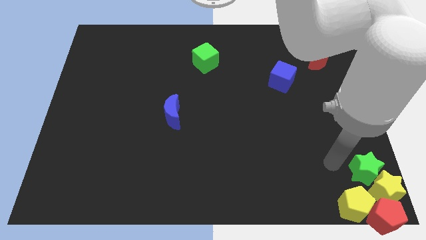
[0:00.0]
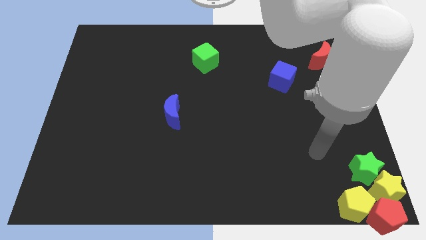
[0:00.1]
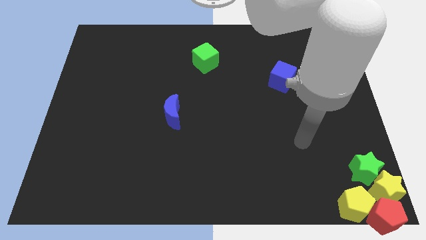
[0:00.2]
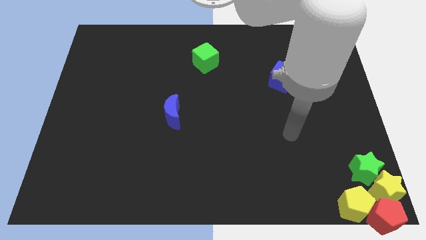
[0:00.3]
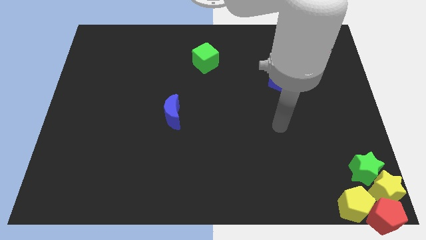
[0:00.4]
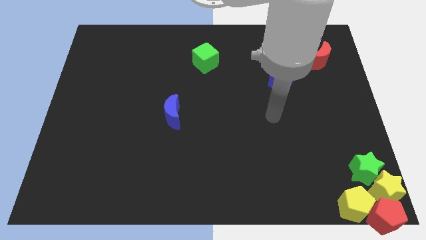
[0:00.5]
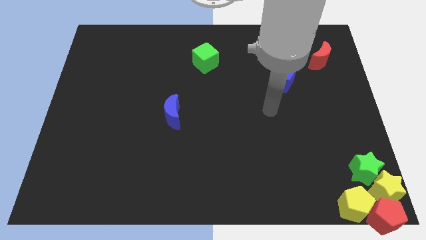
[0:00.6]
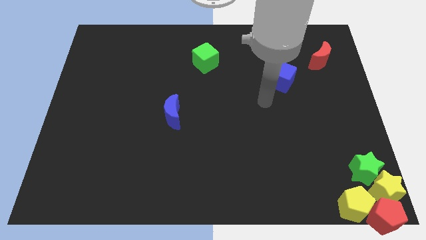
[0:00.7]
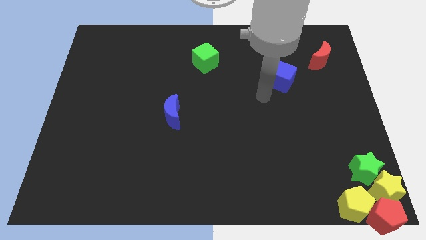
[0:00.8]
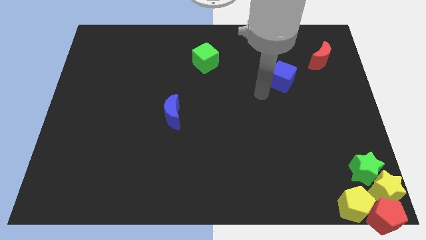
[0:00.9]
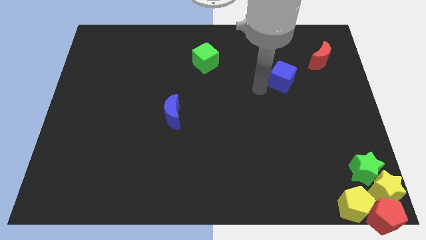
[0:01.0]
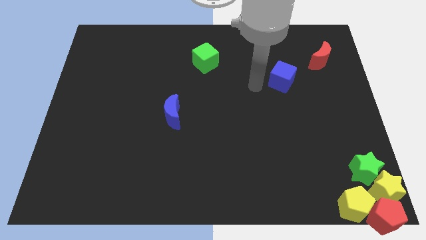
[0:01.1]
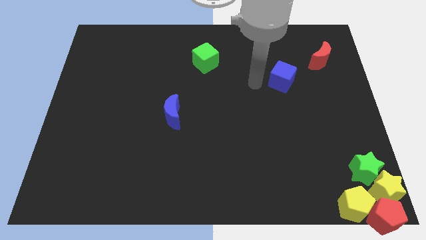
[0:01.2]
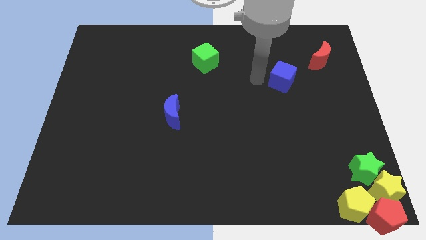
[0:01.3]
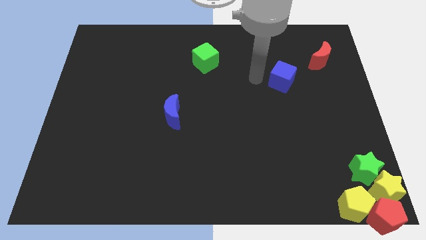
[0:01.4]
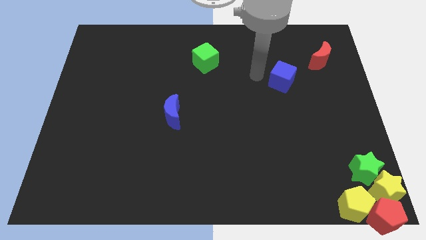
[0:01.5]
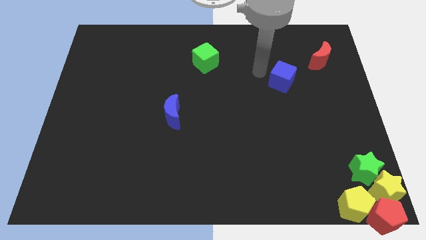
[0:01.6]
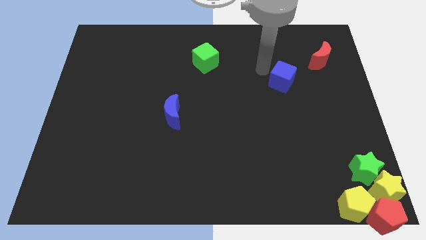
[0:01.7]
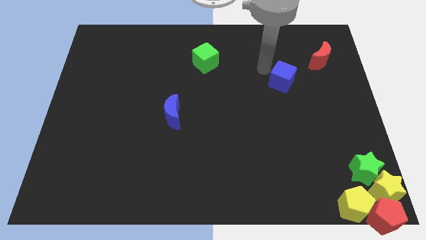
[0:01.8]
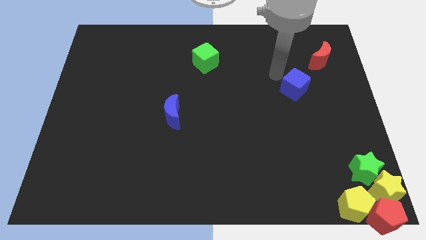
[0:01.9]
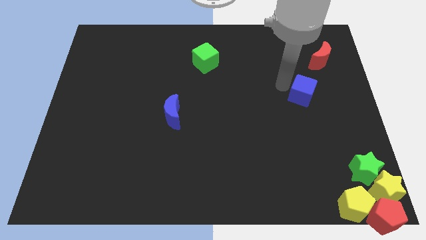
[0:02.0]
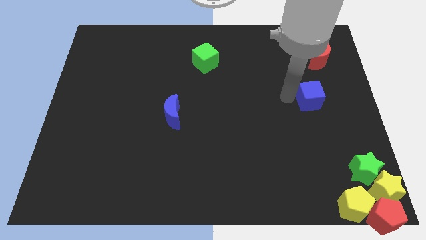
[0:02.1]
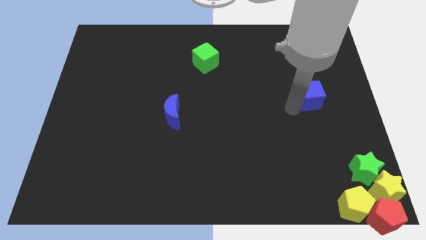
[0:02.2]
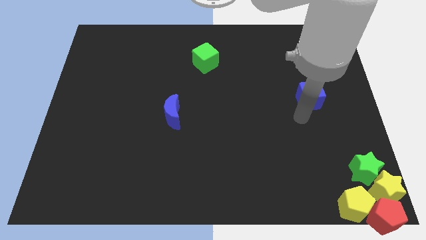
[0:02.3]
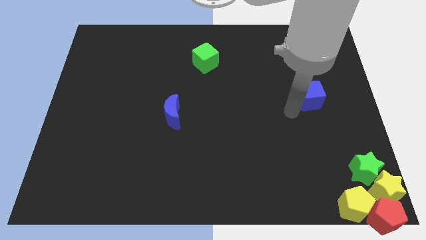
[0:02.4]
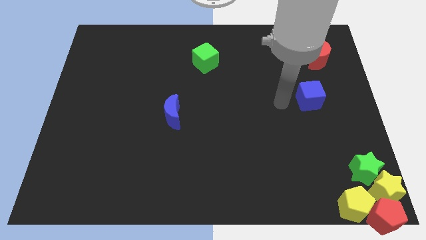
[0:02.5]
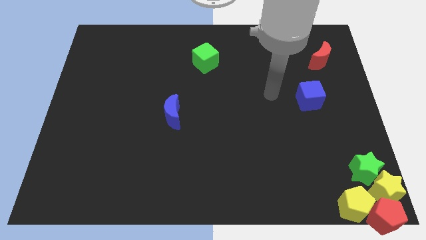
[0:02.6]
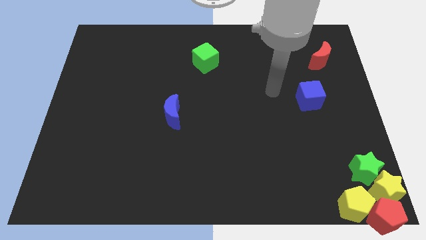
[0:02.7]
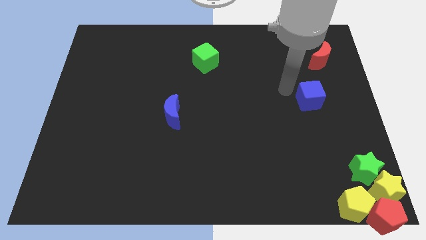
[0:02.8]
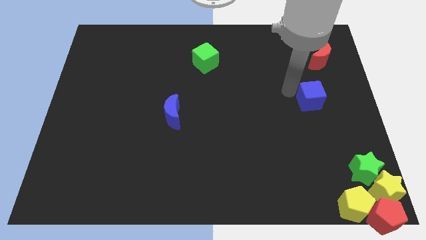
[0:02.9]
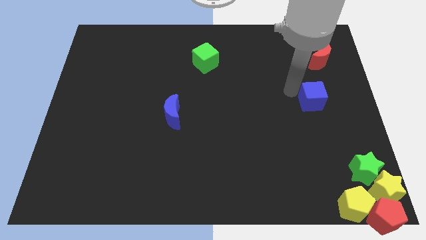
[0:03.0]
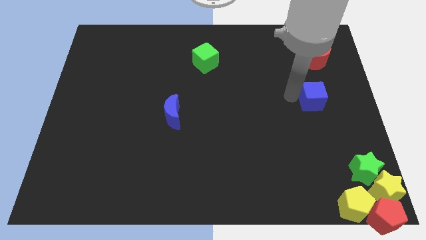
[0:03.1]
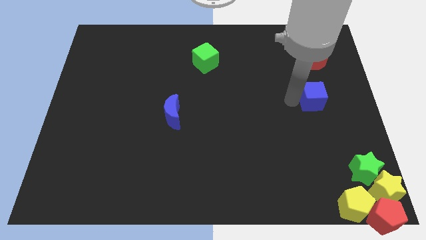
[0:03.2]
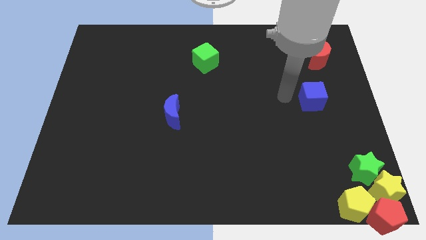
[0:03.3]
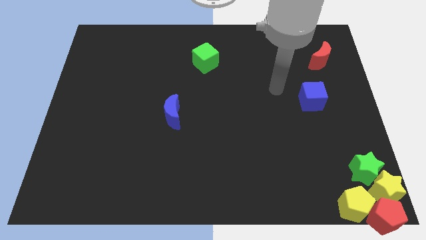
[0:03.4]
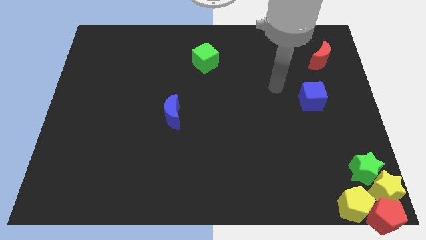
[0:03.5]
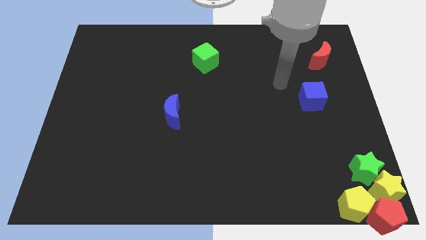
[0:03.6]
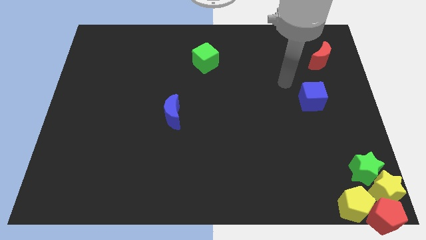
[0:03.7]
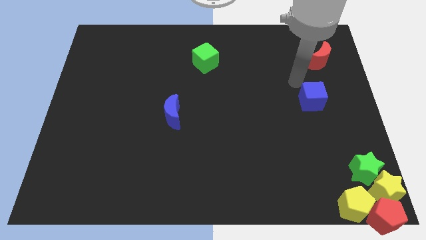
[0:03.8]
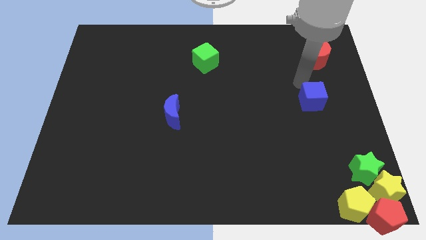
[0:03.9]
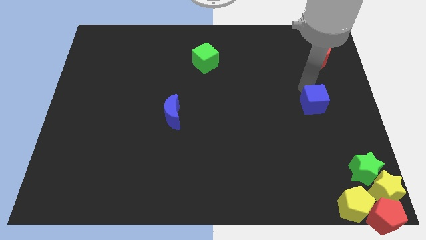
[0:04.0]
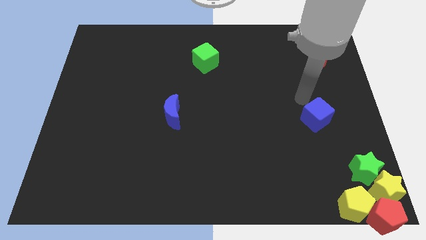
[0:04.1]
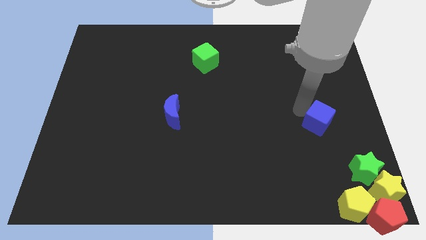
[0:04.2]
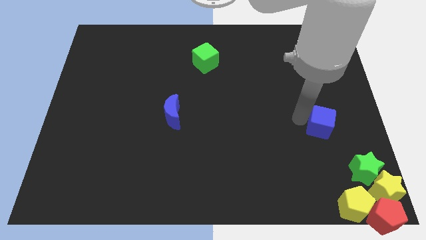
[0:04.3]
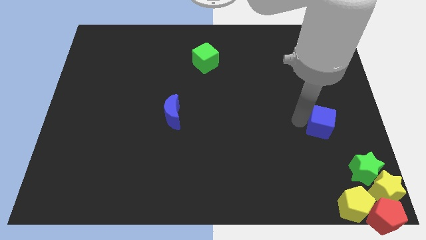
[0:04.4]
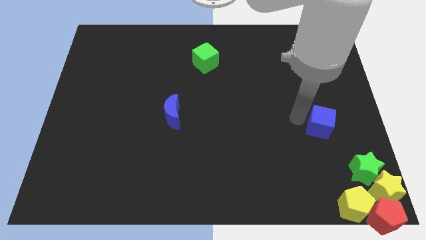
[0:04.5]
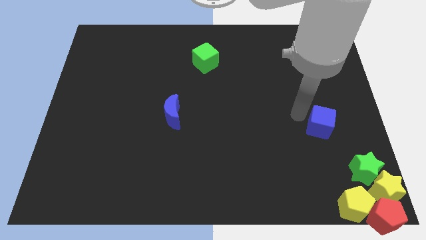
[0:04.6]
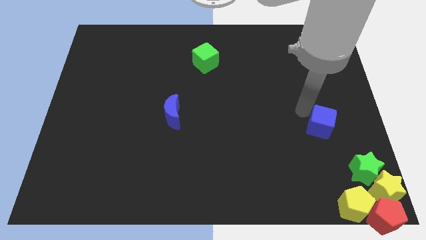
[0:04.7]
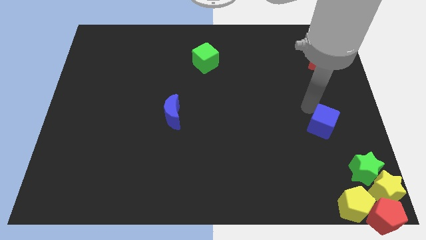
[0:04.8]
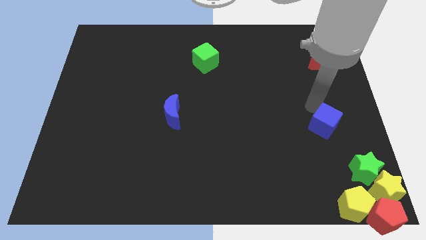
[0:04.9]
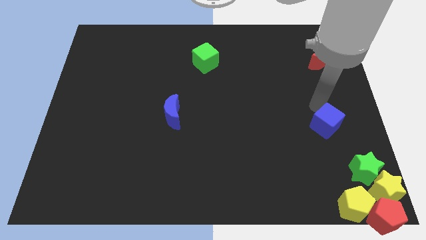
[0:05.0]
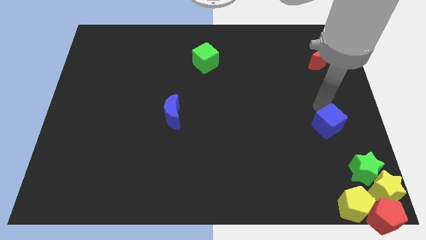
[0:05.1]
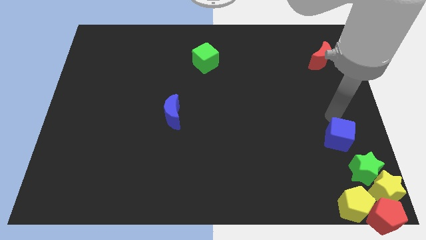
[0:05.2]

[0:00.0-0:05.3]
place the blue cube above the green star

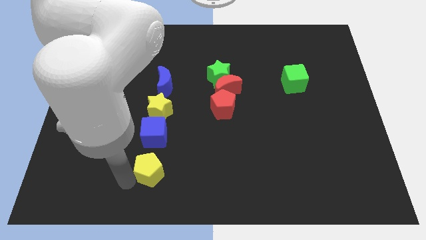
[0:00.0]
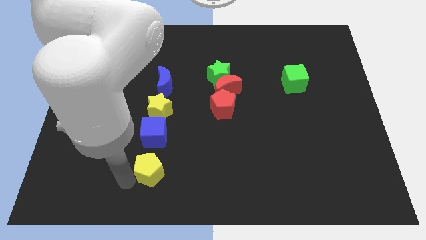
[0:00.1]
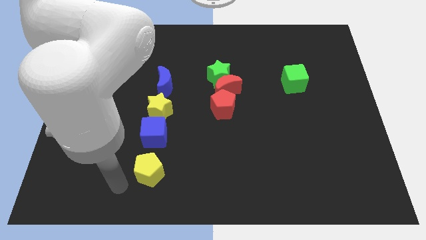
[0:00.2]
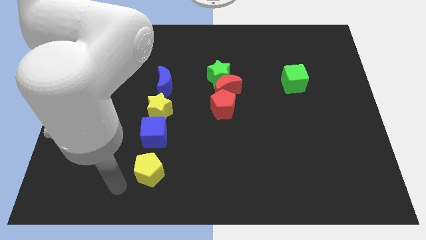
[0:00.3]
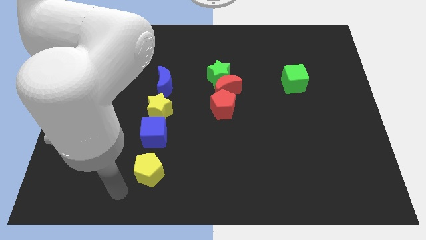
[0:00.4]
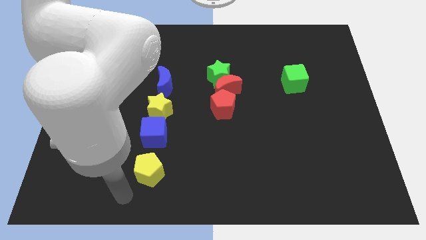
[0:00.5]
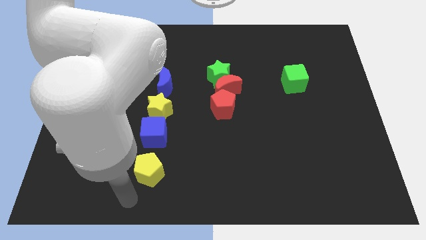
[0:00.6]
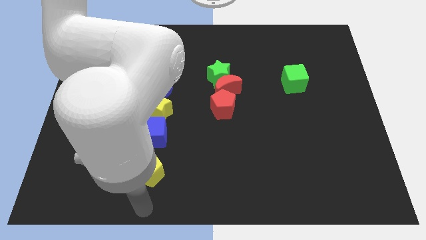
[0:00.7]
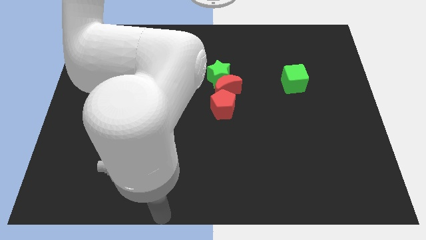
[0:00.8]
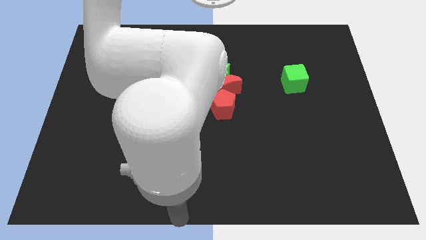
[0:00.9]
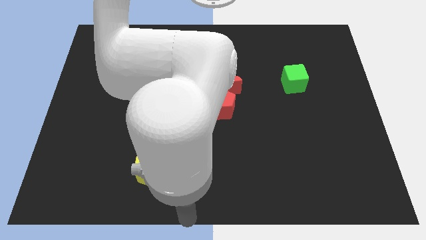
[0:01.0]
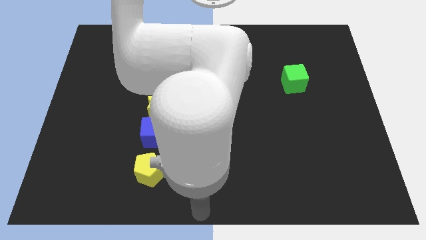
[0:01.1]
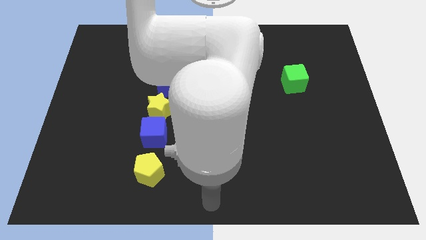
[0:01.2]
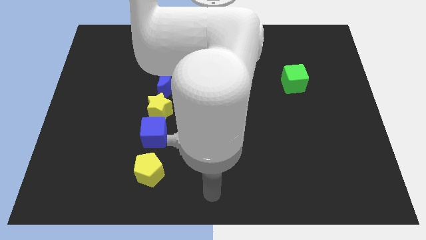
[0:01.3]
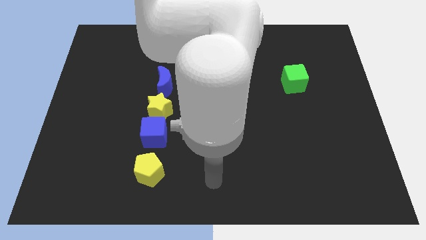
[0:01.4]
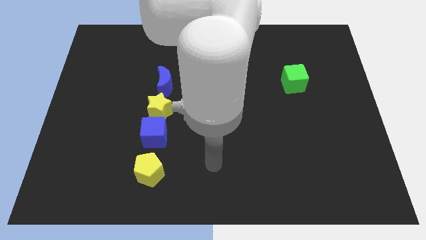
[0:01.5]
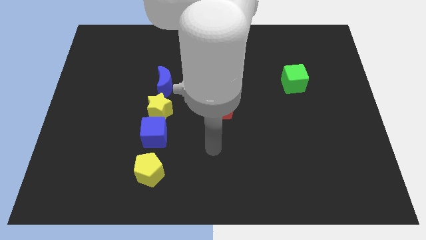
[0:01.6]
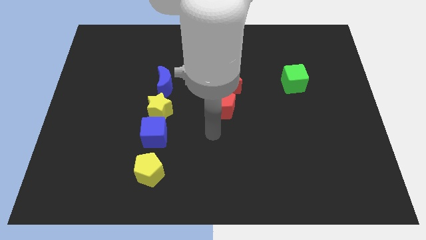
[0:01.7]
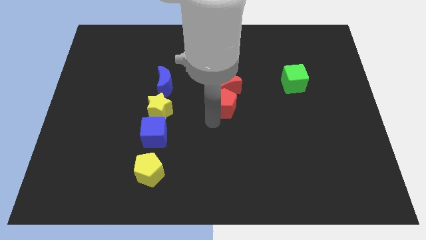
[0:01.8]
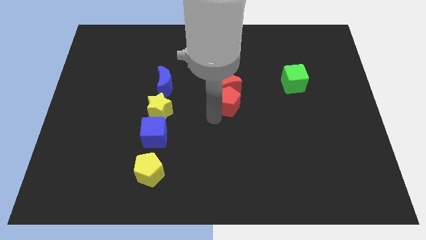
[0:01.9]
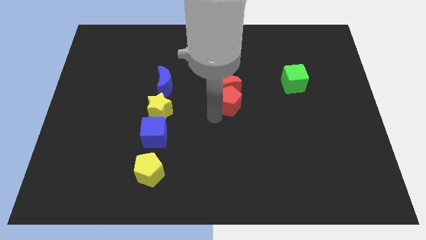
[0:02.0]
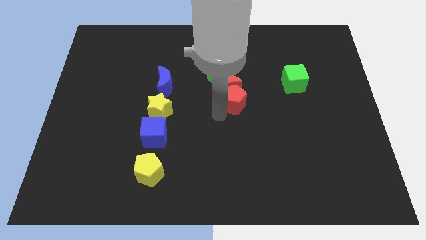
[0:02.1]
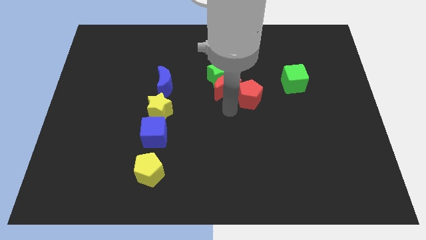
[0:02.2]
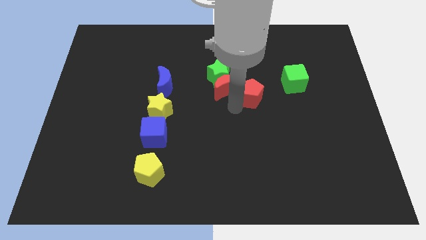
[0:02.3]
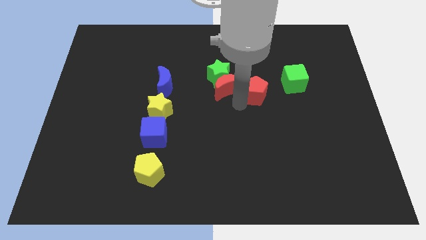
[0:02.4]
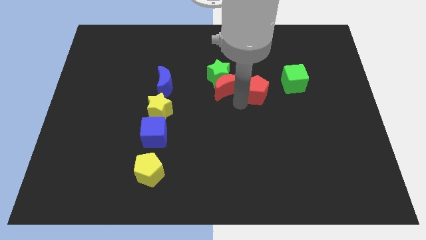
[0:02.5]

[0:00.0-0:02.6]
place red pentagon to the right of red moon

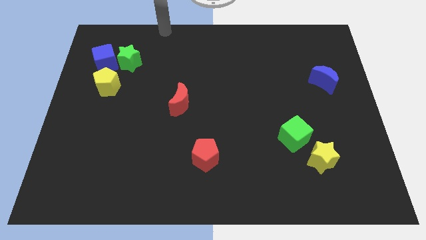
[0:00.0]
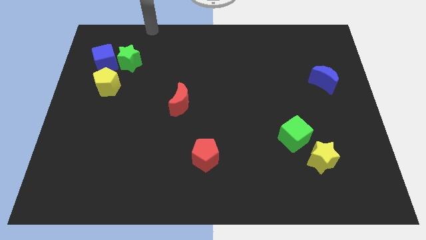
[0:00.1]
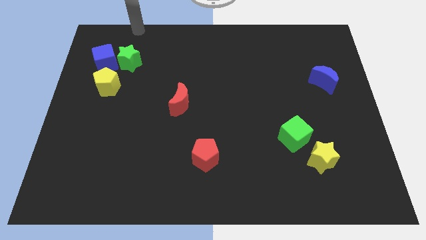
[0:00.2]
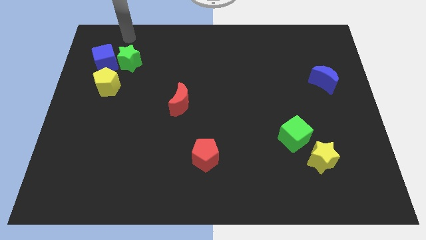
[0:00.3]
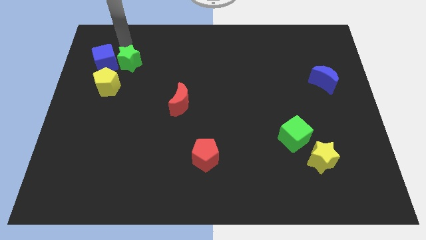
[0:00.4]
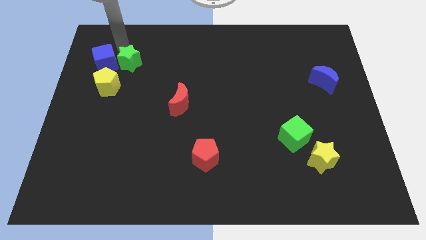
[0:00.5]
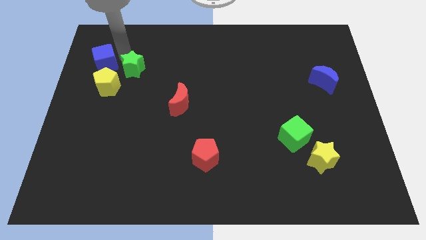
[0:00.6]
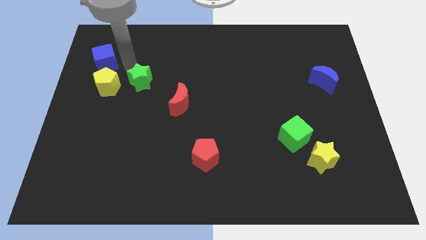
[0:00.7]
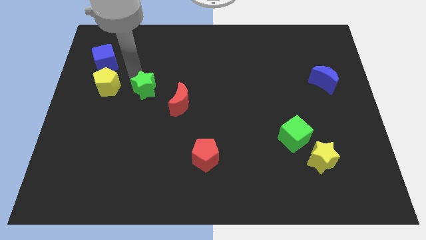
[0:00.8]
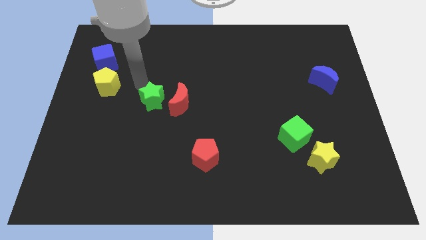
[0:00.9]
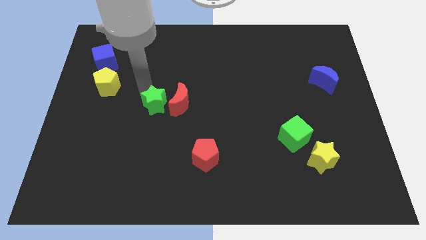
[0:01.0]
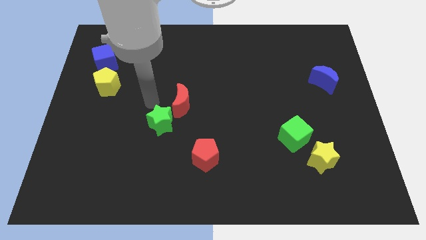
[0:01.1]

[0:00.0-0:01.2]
move the green star to the left of the red crescent
